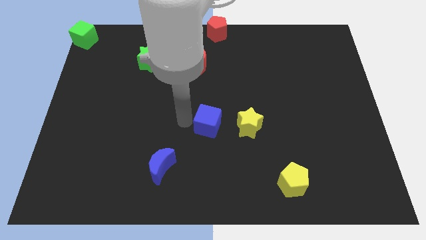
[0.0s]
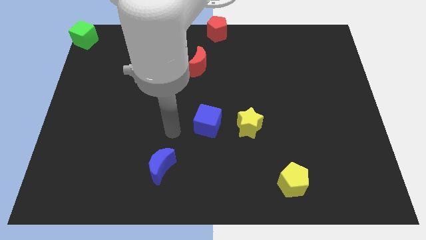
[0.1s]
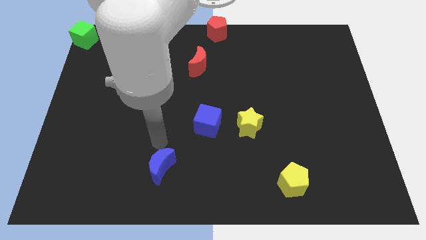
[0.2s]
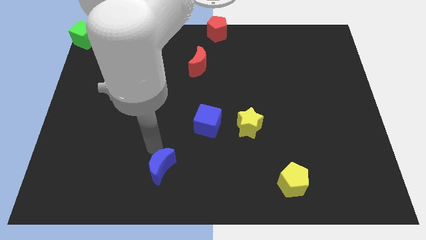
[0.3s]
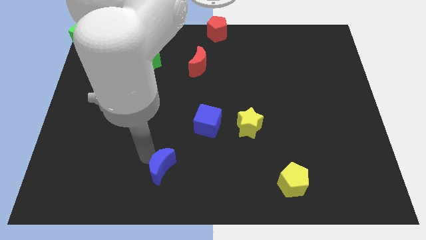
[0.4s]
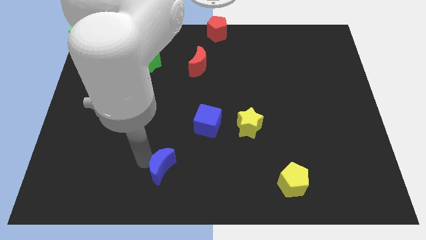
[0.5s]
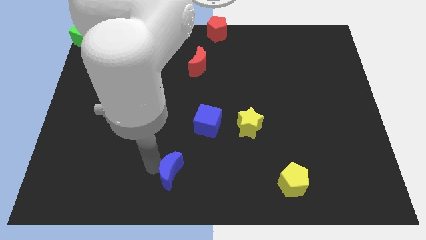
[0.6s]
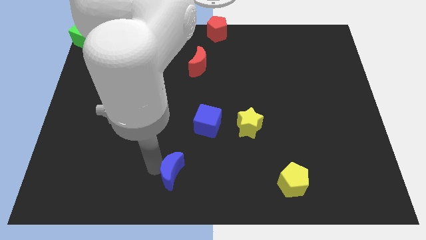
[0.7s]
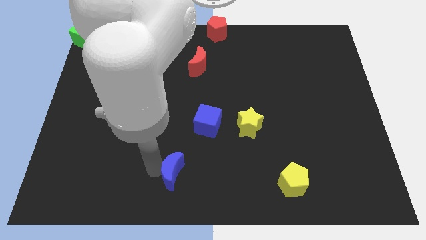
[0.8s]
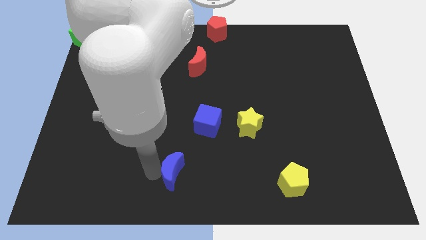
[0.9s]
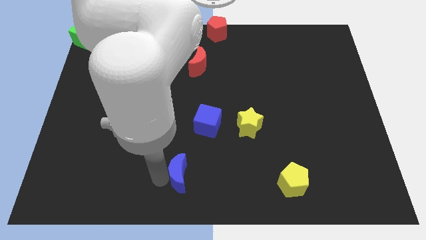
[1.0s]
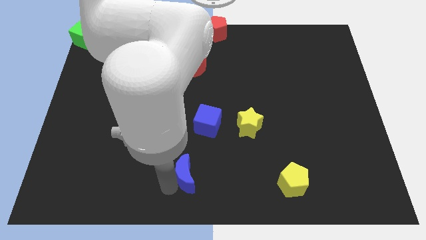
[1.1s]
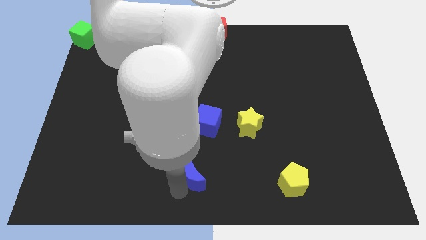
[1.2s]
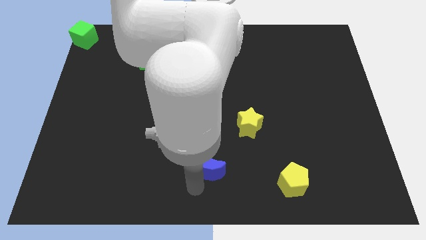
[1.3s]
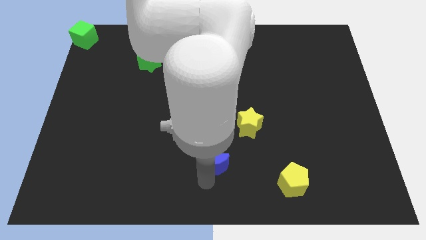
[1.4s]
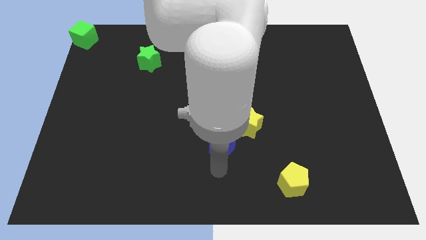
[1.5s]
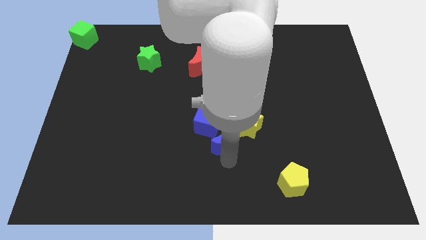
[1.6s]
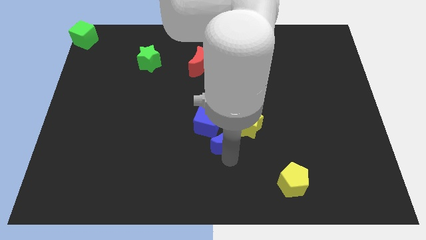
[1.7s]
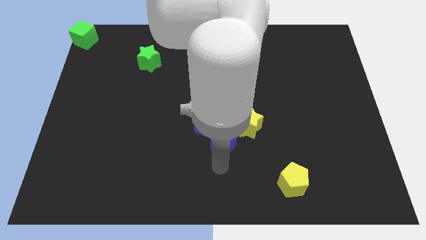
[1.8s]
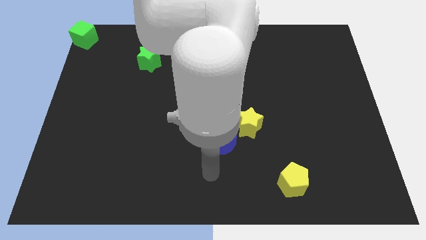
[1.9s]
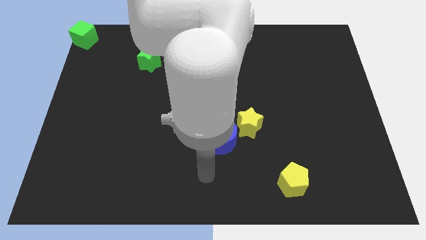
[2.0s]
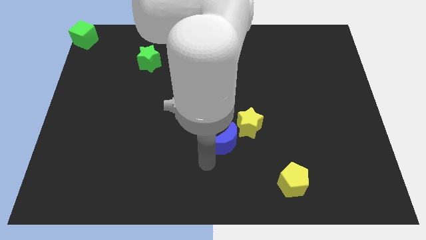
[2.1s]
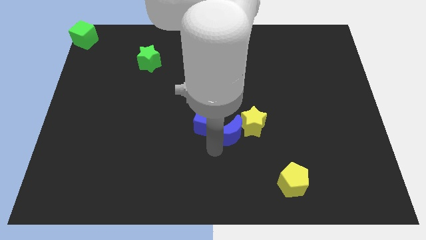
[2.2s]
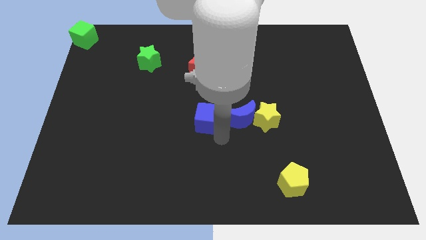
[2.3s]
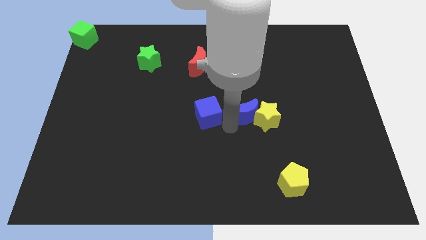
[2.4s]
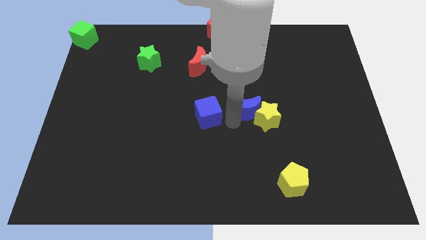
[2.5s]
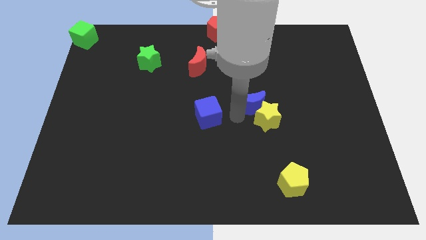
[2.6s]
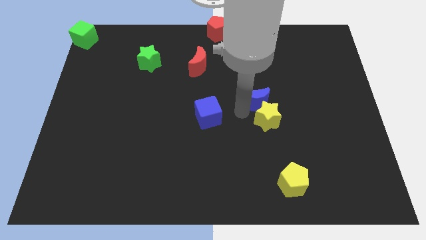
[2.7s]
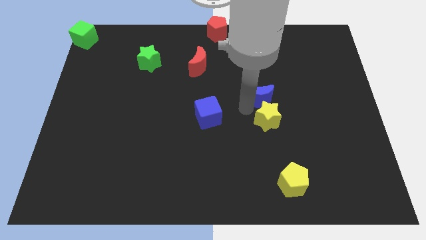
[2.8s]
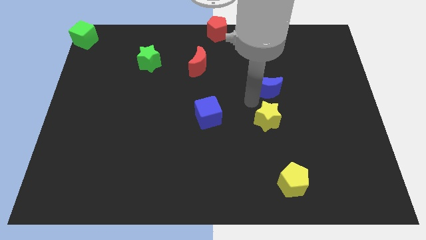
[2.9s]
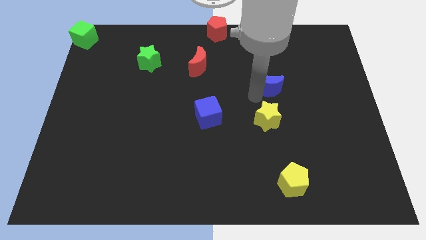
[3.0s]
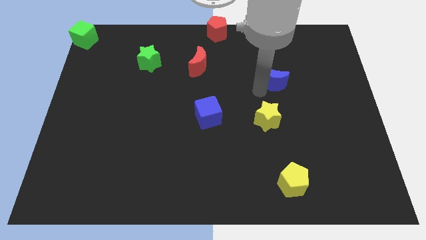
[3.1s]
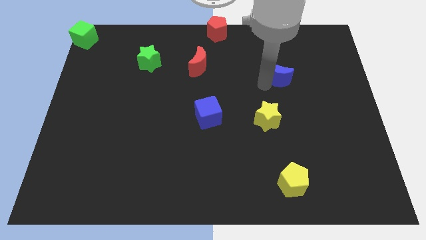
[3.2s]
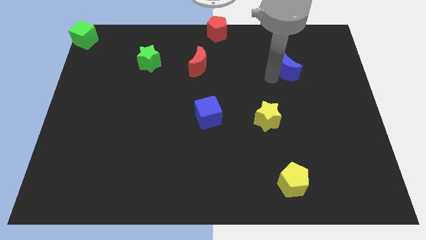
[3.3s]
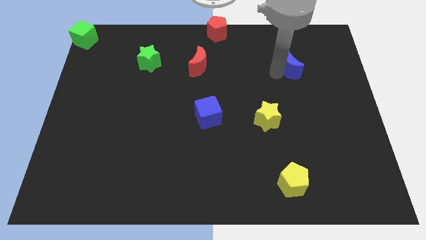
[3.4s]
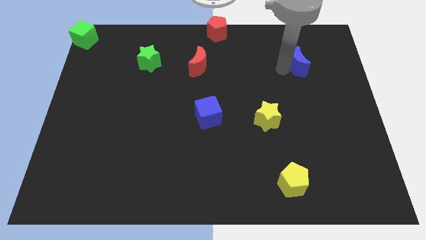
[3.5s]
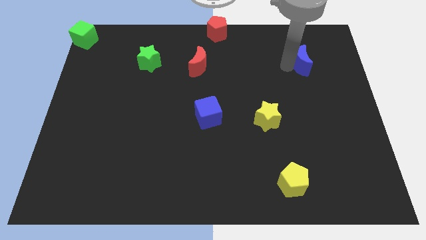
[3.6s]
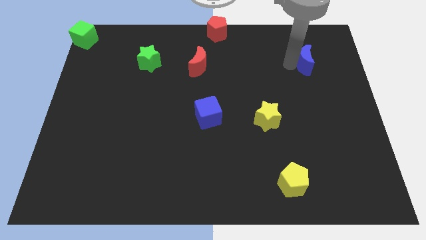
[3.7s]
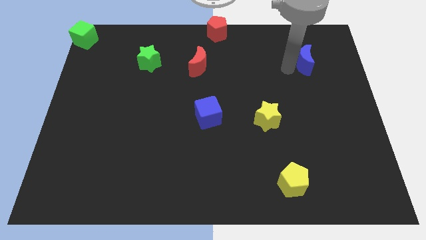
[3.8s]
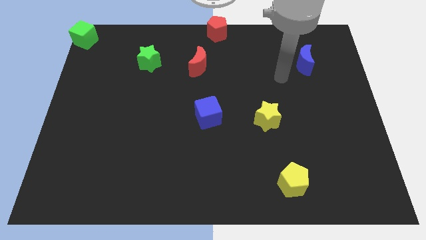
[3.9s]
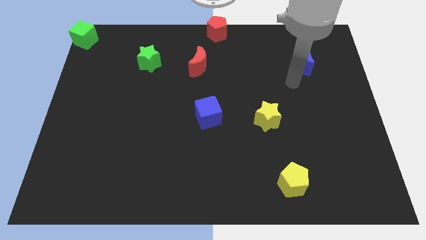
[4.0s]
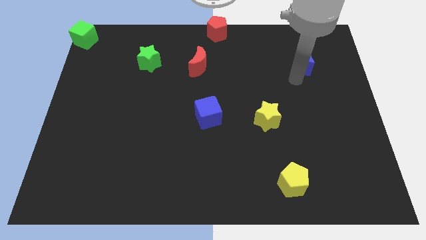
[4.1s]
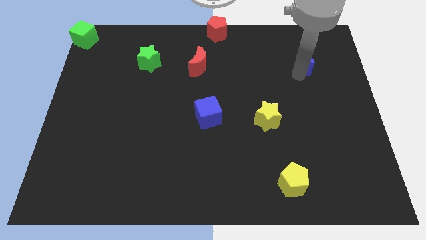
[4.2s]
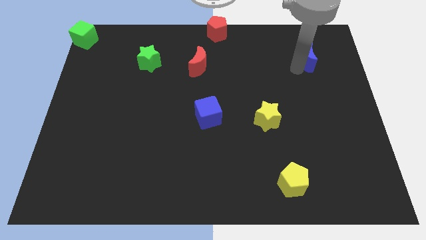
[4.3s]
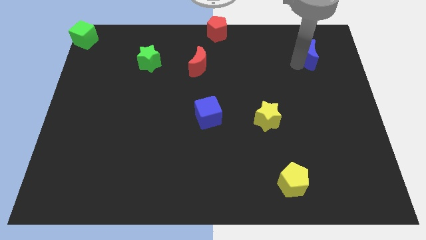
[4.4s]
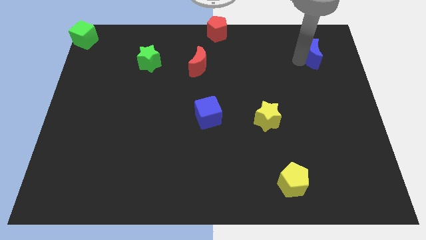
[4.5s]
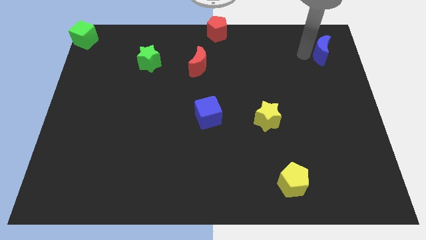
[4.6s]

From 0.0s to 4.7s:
place the blue moon to the top right of the table

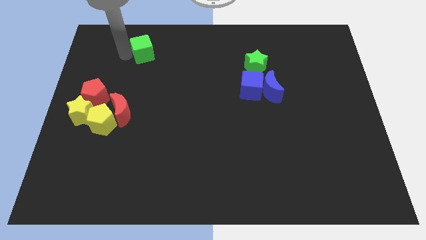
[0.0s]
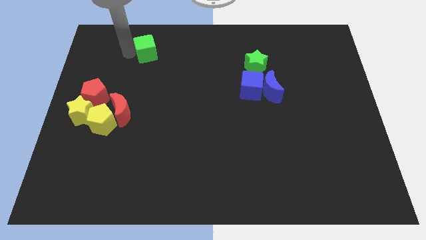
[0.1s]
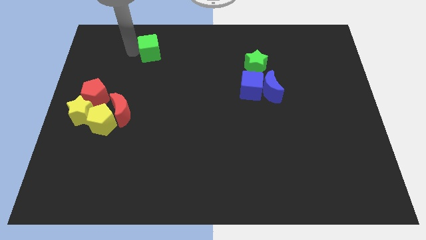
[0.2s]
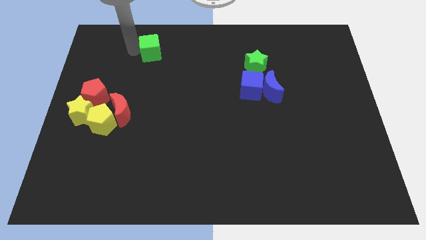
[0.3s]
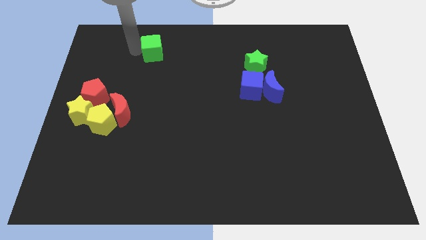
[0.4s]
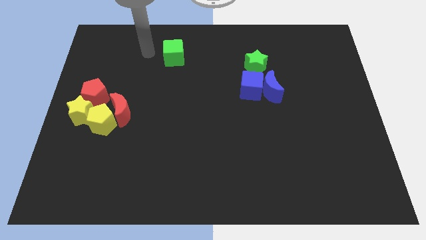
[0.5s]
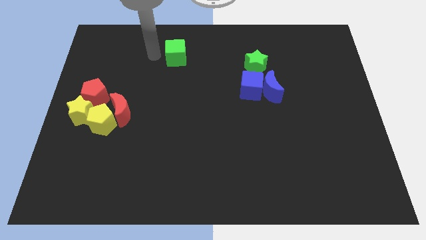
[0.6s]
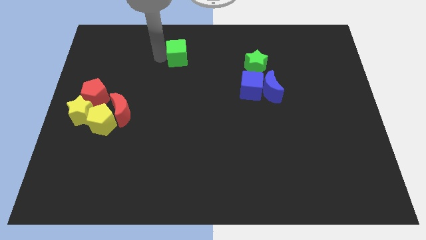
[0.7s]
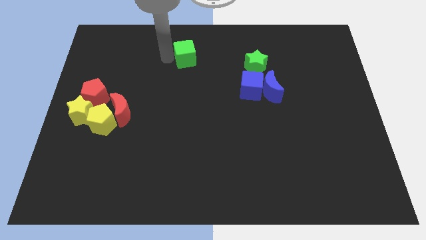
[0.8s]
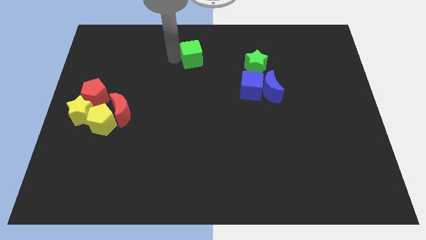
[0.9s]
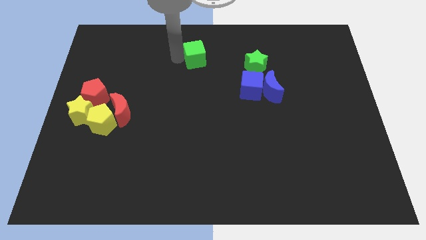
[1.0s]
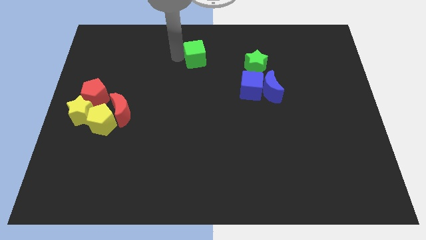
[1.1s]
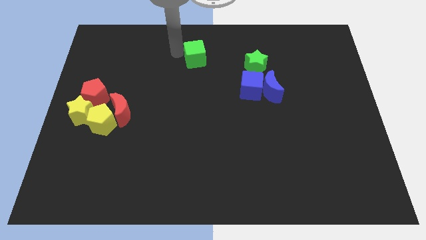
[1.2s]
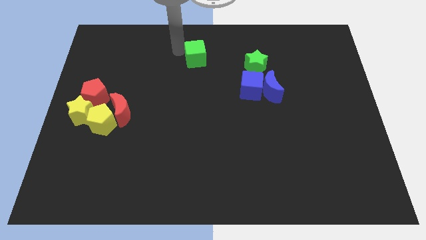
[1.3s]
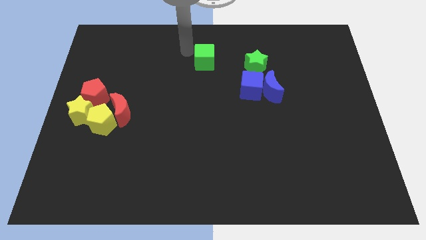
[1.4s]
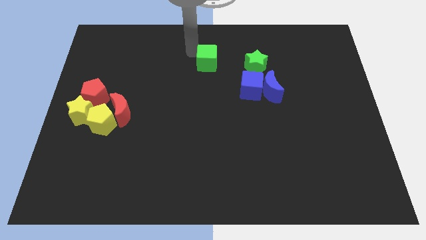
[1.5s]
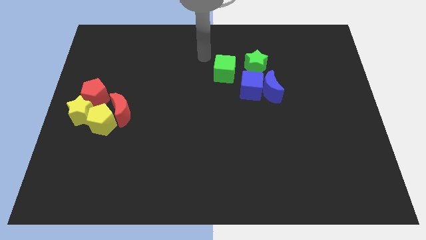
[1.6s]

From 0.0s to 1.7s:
place green cube near green star

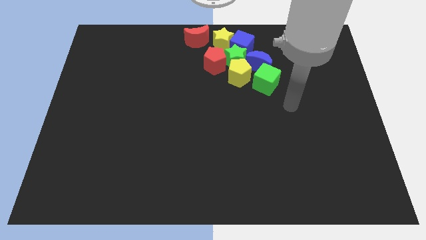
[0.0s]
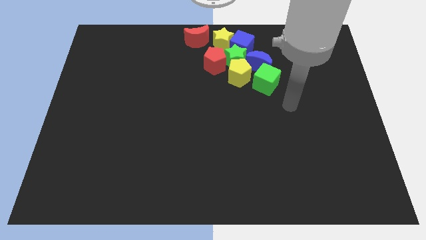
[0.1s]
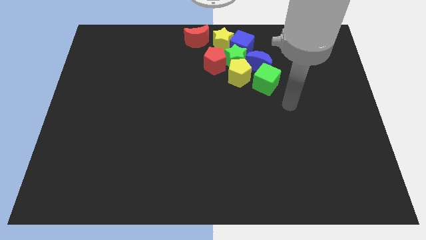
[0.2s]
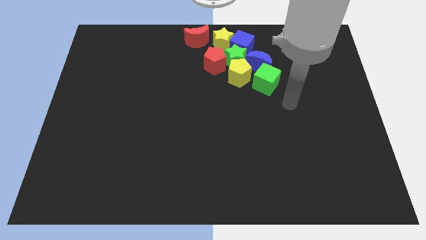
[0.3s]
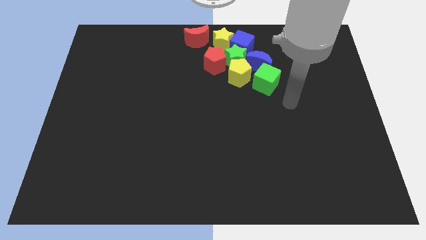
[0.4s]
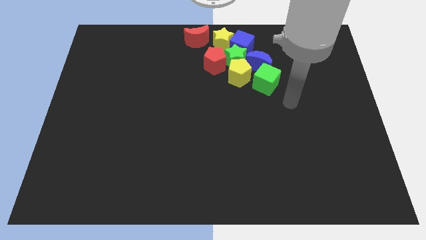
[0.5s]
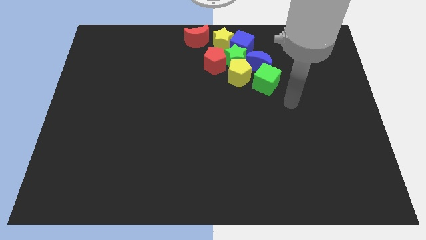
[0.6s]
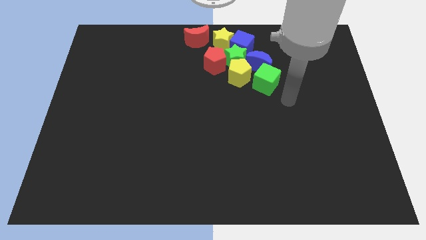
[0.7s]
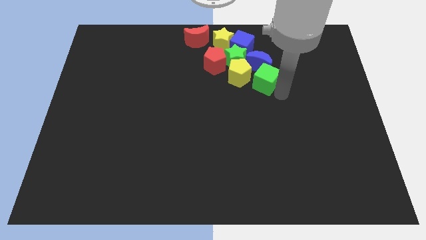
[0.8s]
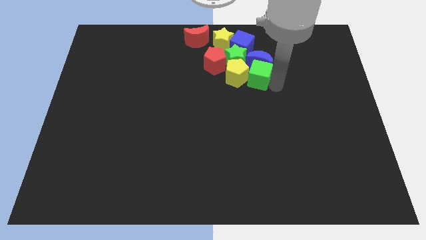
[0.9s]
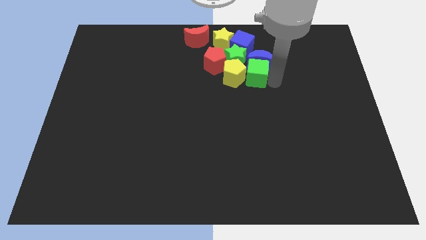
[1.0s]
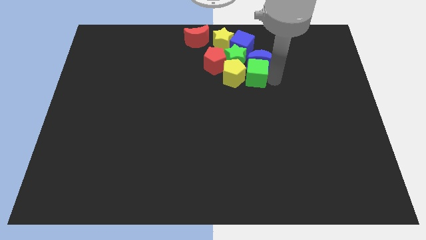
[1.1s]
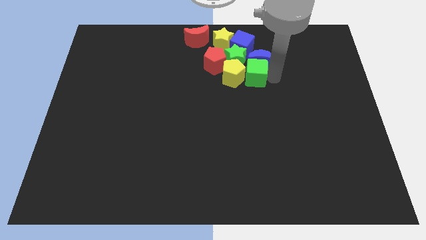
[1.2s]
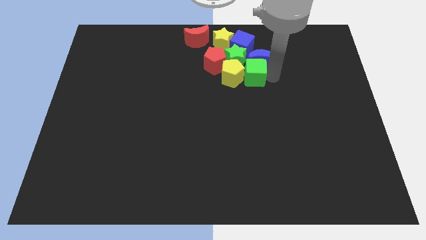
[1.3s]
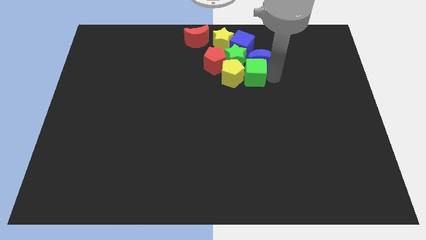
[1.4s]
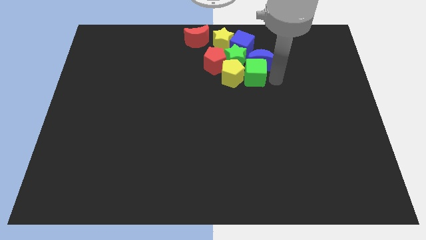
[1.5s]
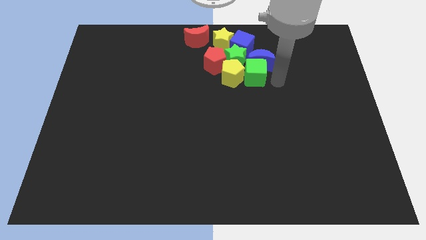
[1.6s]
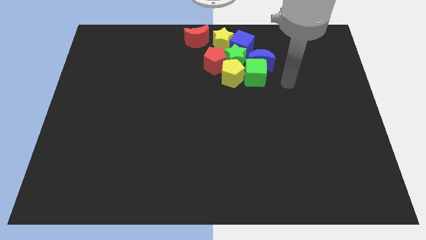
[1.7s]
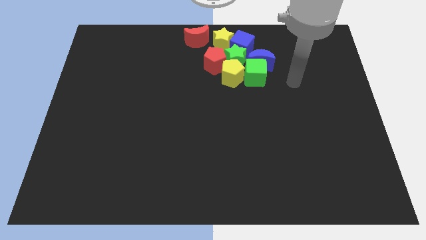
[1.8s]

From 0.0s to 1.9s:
move the green cube into the green star

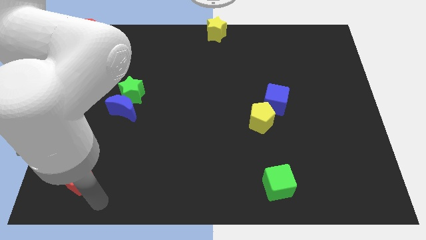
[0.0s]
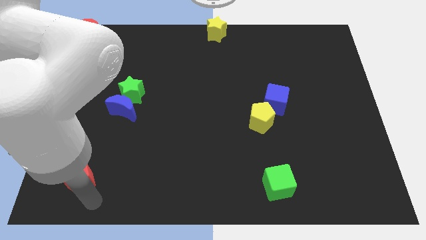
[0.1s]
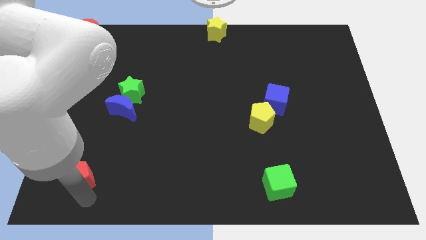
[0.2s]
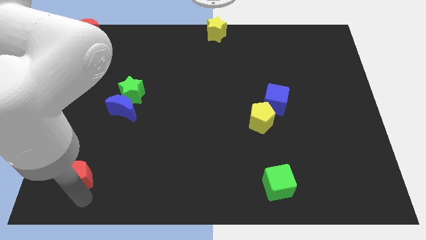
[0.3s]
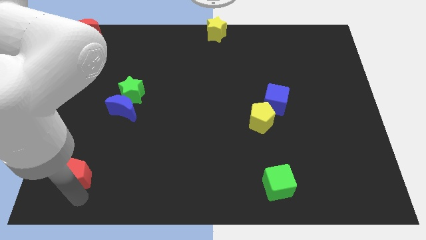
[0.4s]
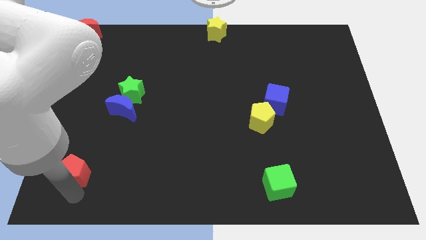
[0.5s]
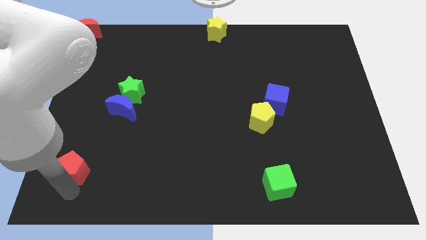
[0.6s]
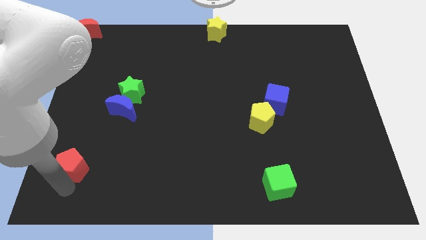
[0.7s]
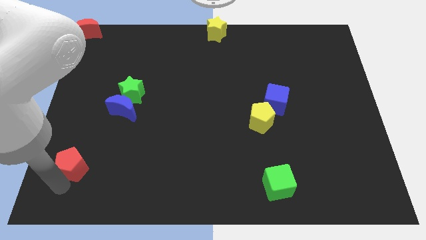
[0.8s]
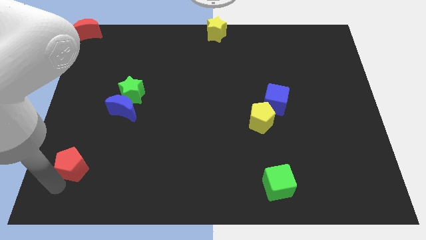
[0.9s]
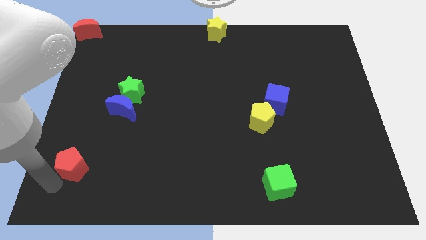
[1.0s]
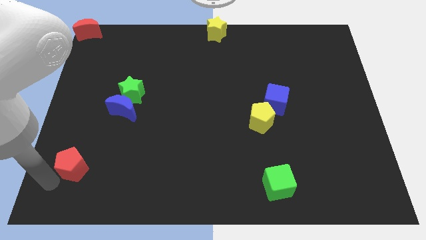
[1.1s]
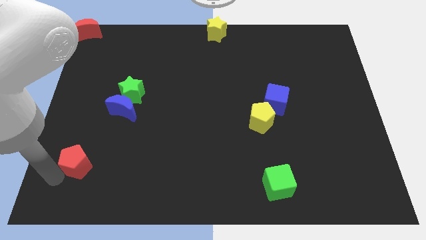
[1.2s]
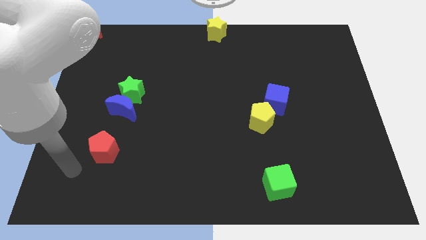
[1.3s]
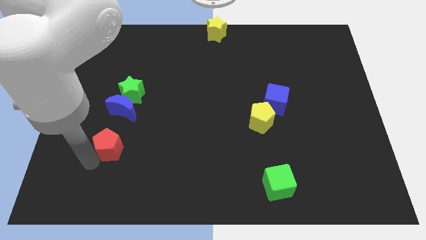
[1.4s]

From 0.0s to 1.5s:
drag the red pentagon vertically below the blue moon
